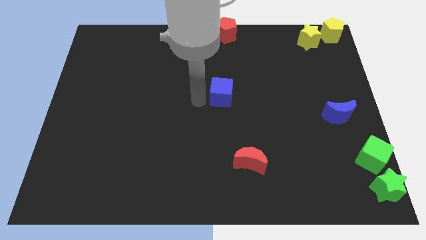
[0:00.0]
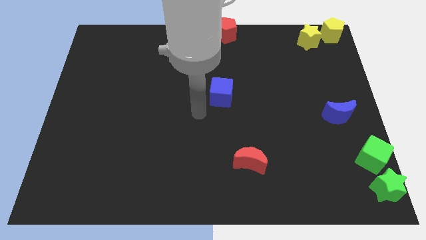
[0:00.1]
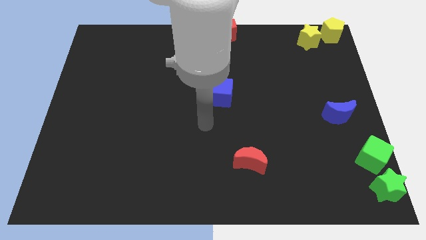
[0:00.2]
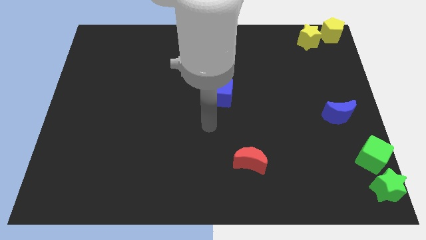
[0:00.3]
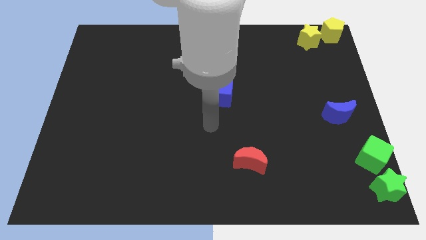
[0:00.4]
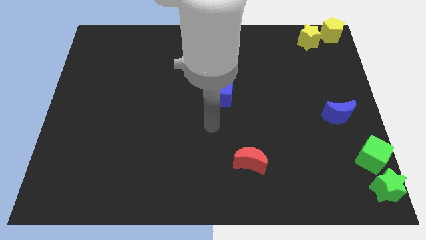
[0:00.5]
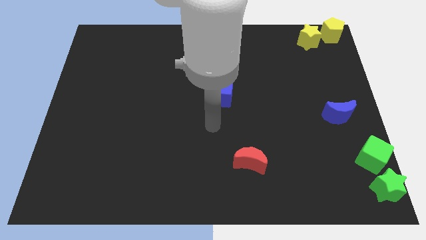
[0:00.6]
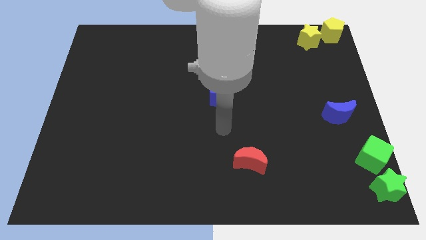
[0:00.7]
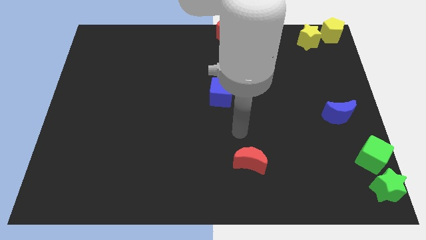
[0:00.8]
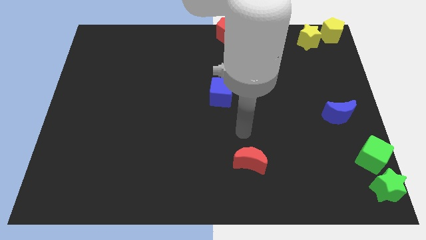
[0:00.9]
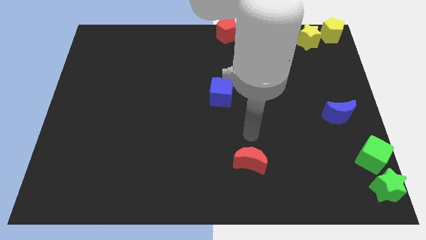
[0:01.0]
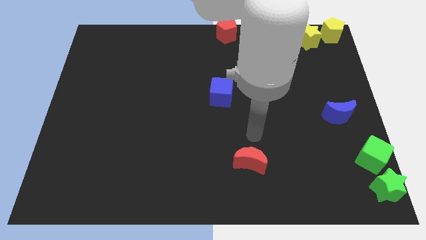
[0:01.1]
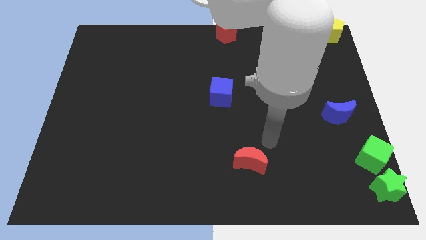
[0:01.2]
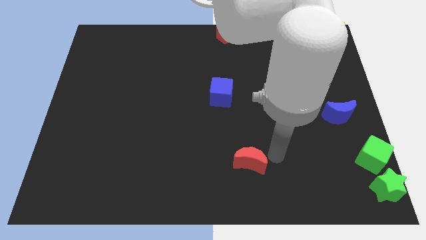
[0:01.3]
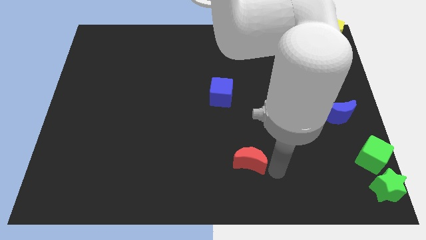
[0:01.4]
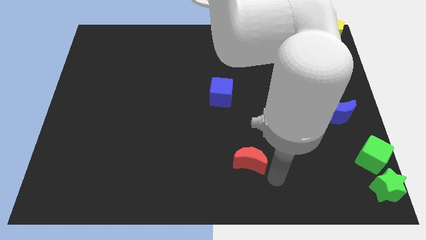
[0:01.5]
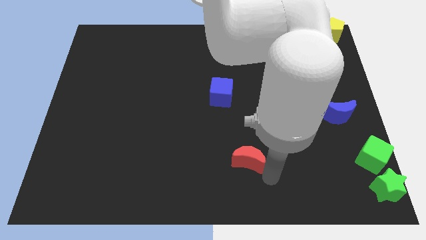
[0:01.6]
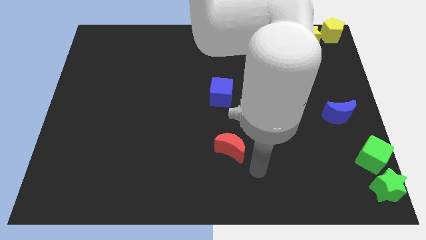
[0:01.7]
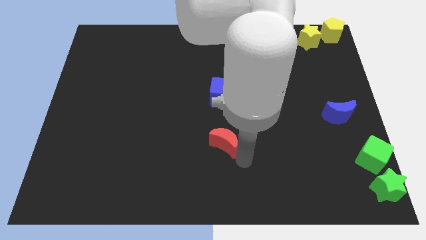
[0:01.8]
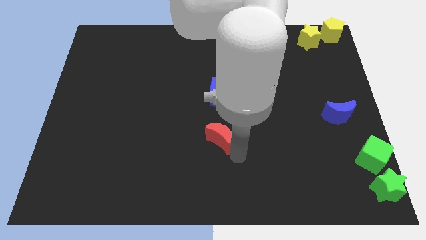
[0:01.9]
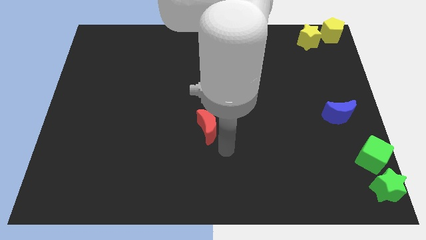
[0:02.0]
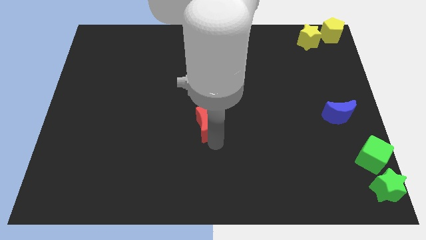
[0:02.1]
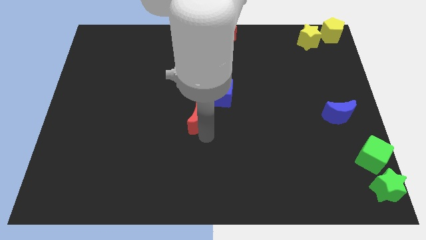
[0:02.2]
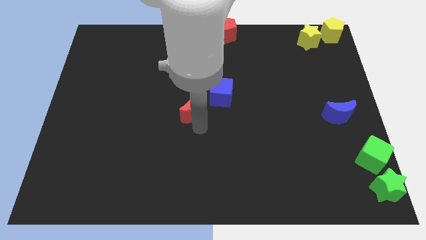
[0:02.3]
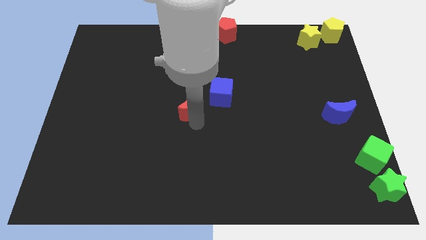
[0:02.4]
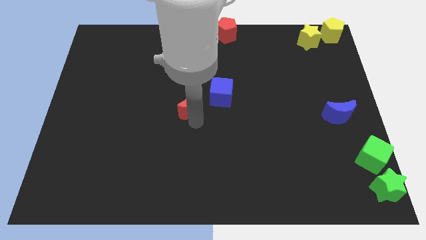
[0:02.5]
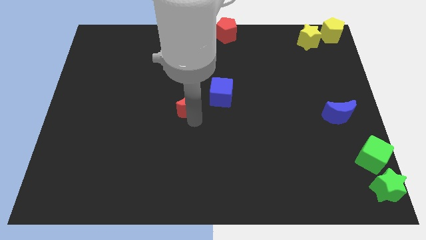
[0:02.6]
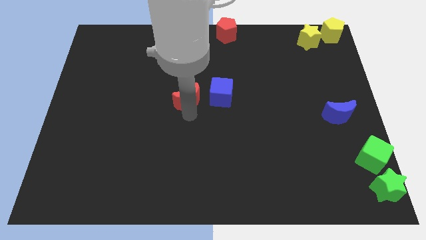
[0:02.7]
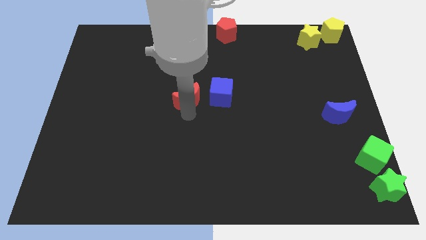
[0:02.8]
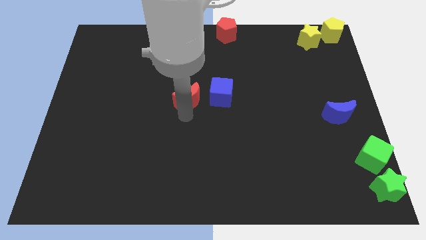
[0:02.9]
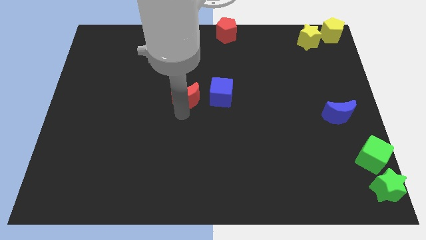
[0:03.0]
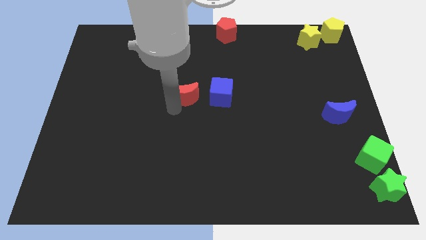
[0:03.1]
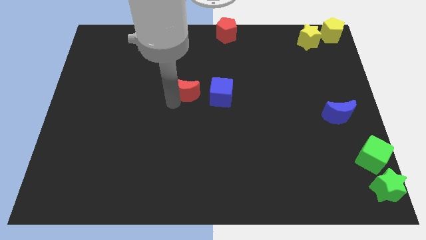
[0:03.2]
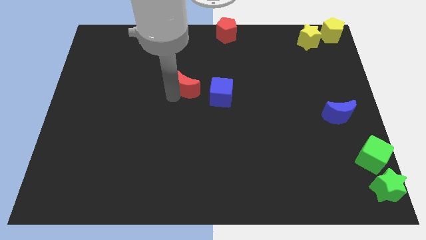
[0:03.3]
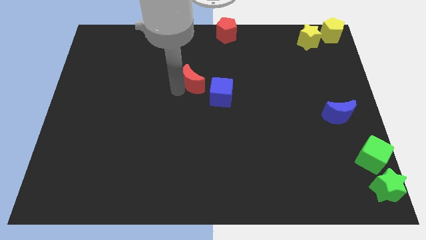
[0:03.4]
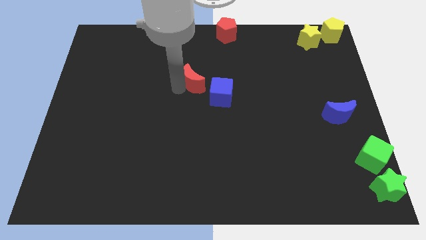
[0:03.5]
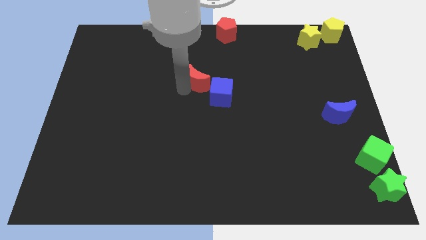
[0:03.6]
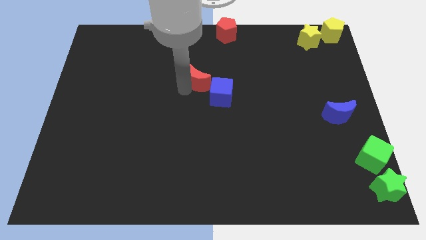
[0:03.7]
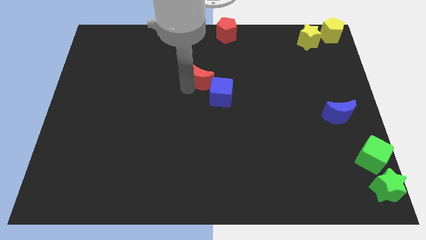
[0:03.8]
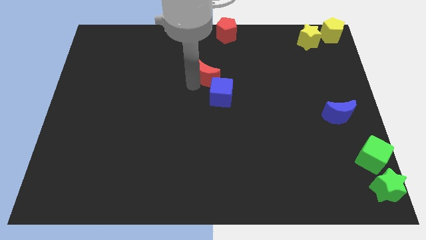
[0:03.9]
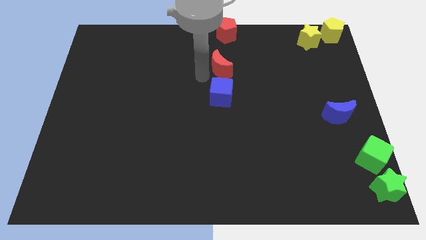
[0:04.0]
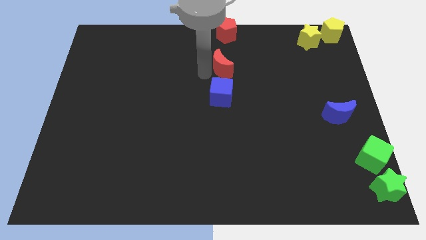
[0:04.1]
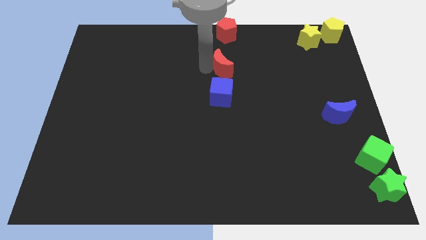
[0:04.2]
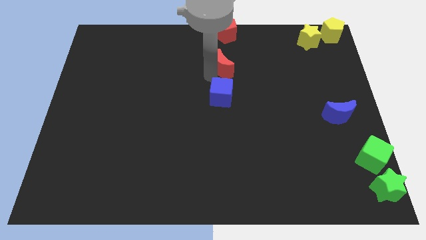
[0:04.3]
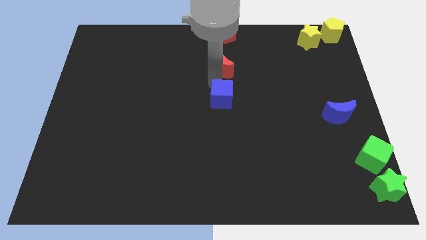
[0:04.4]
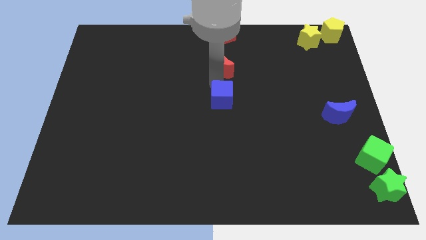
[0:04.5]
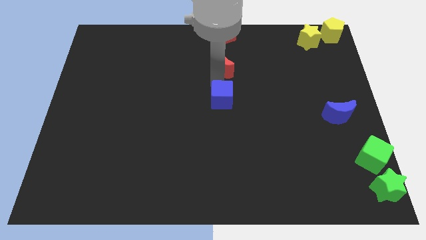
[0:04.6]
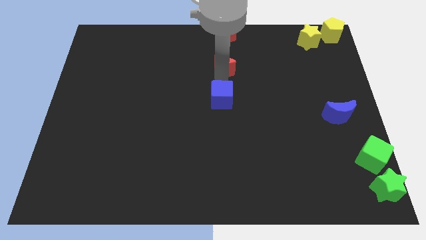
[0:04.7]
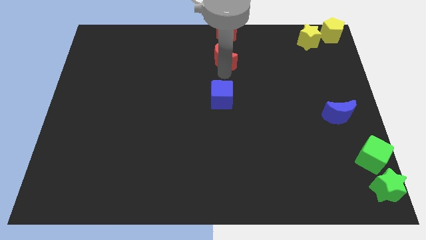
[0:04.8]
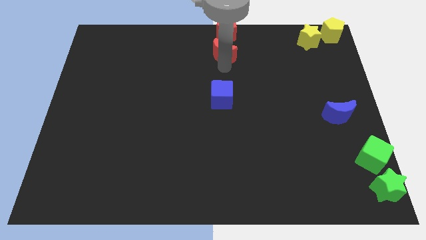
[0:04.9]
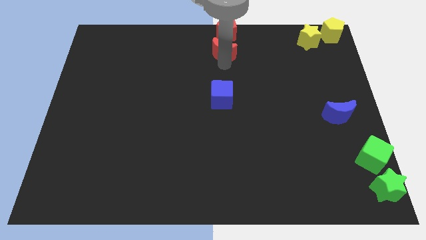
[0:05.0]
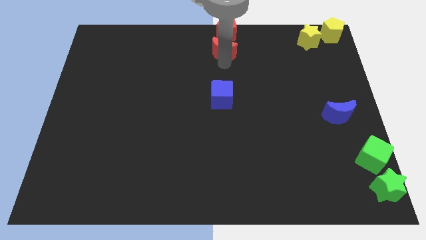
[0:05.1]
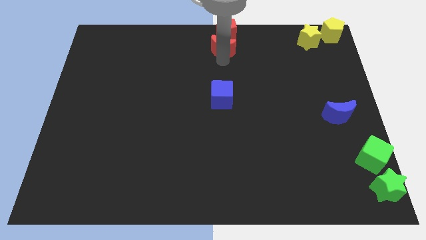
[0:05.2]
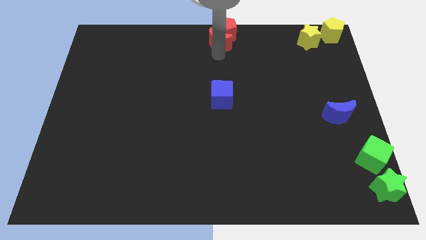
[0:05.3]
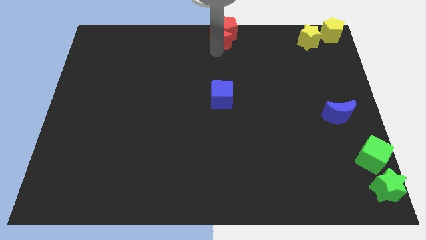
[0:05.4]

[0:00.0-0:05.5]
drag the red crescent into the bottom side of the red pentagon

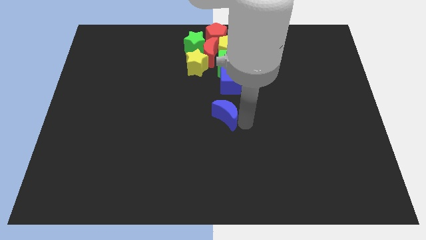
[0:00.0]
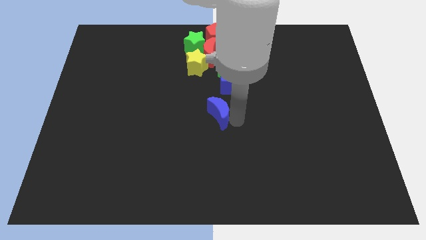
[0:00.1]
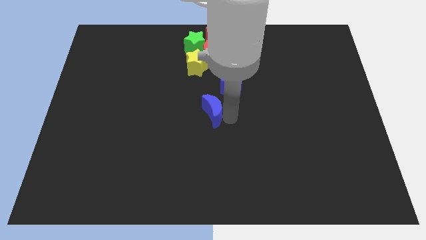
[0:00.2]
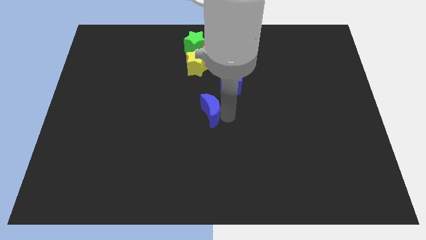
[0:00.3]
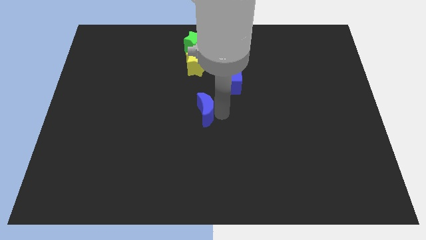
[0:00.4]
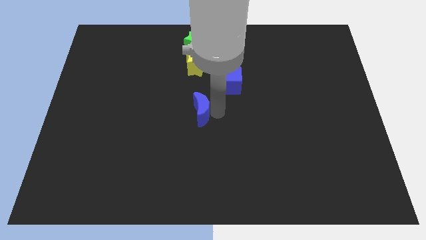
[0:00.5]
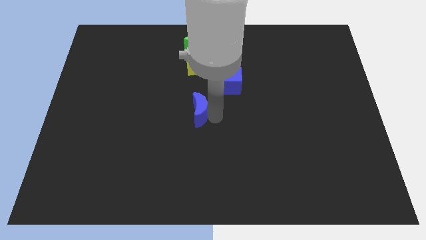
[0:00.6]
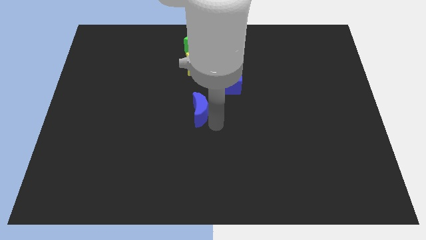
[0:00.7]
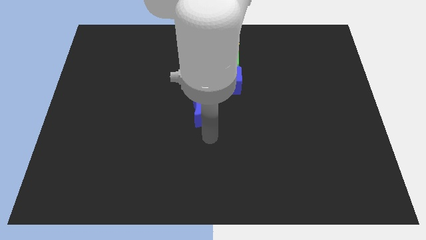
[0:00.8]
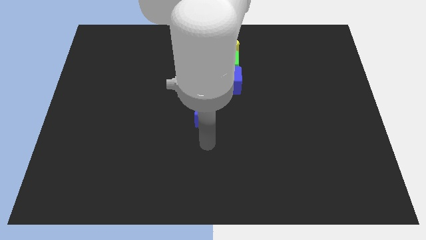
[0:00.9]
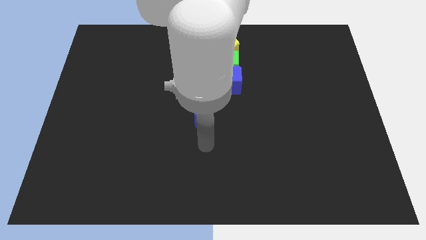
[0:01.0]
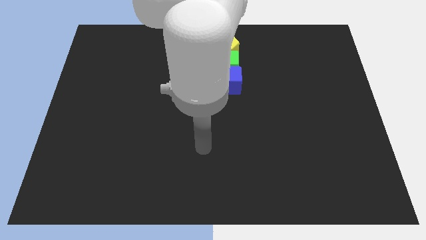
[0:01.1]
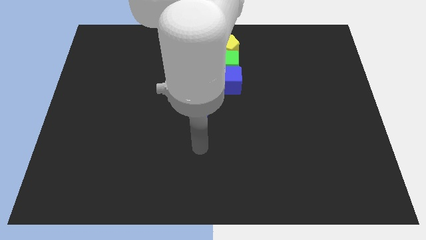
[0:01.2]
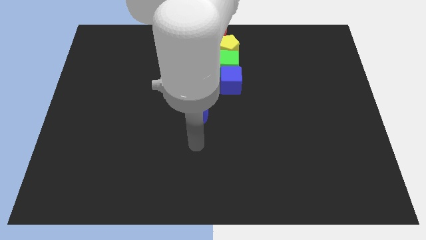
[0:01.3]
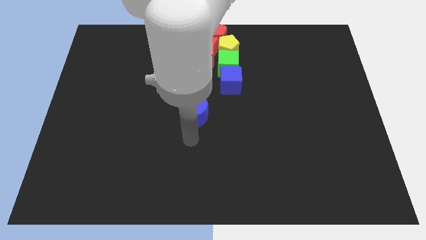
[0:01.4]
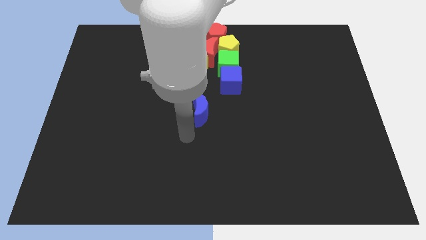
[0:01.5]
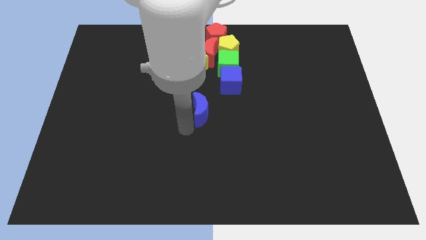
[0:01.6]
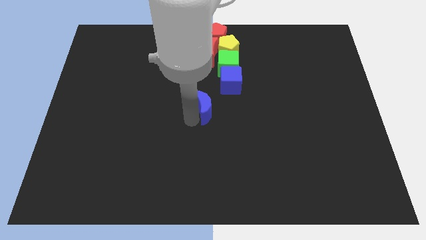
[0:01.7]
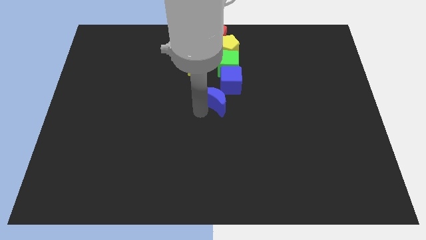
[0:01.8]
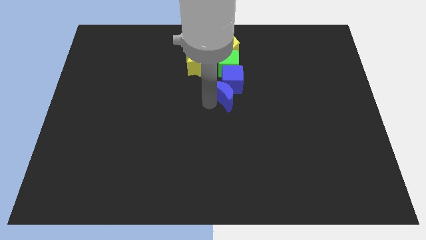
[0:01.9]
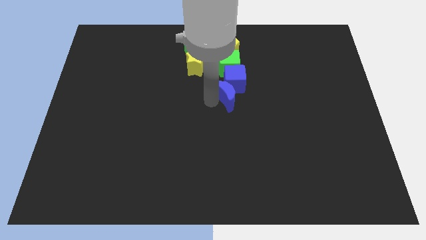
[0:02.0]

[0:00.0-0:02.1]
drag the blue moon into the bottom left side of the blue cube

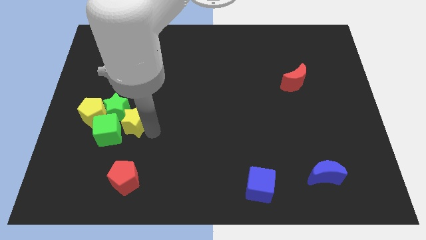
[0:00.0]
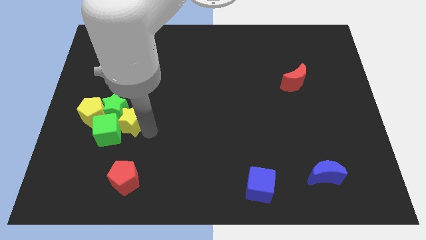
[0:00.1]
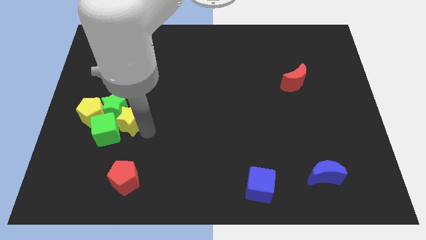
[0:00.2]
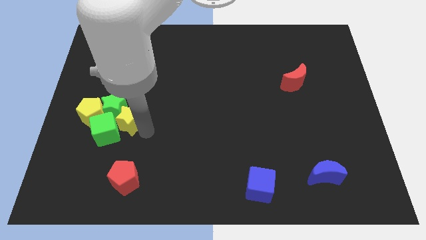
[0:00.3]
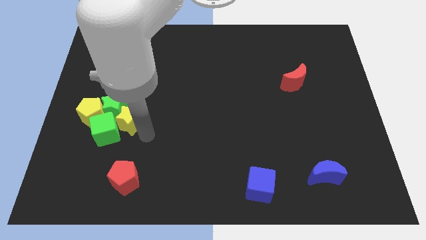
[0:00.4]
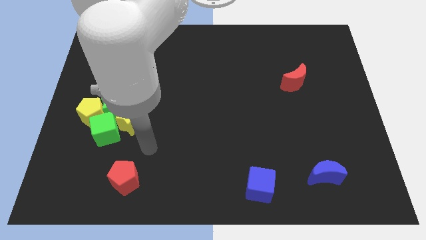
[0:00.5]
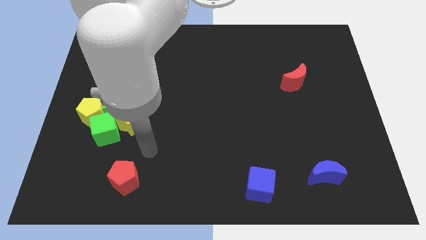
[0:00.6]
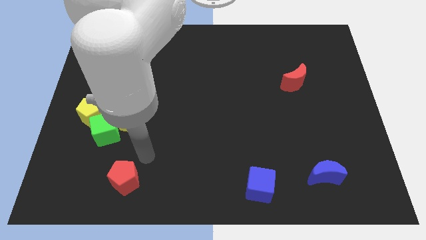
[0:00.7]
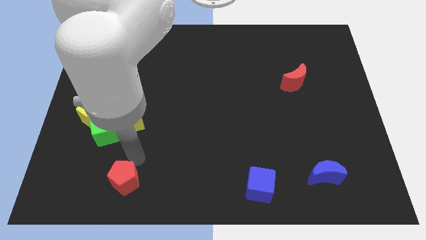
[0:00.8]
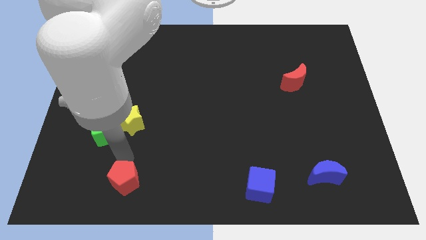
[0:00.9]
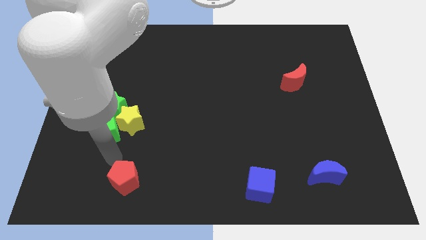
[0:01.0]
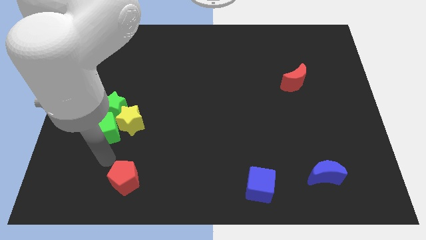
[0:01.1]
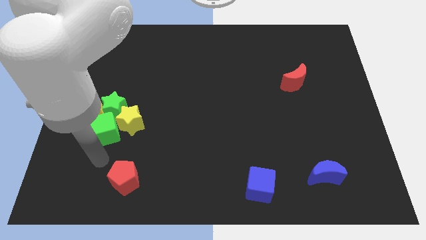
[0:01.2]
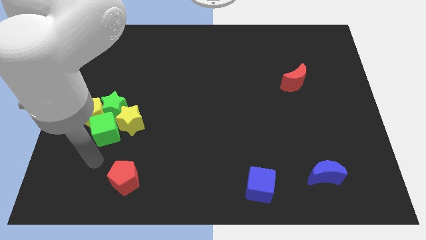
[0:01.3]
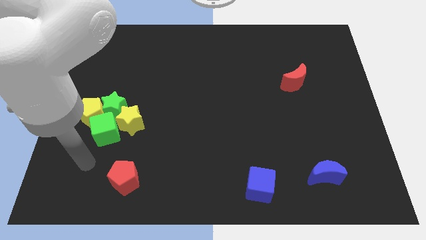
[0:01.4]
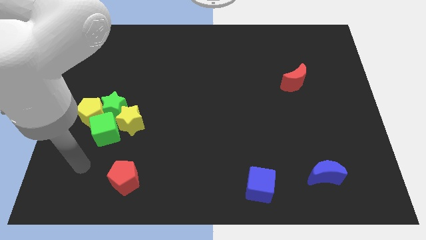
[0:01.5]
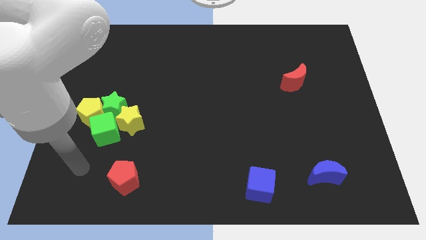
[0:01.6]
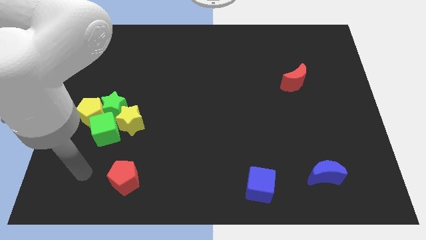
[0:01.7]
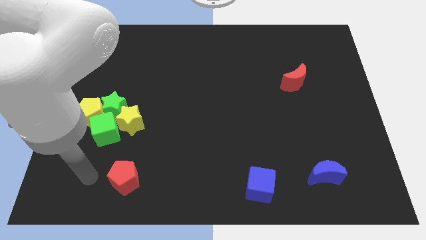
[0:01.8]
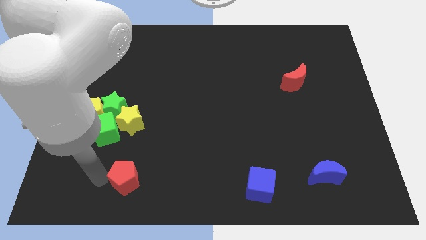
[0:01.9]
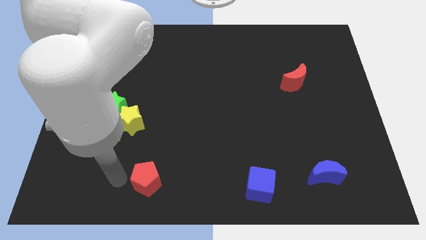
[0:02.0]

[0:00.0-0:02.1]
slightly move your arm near to the red pentagon
